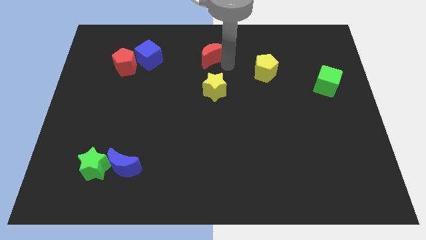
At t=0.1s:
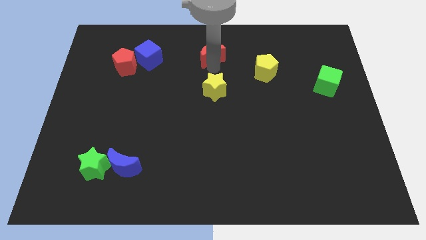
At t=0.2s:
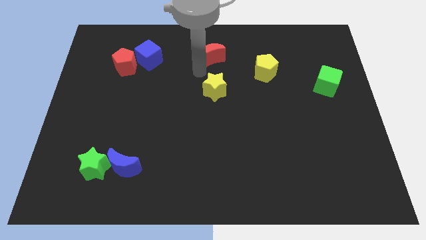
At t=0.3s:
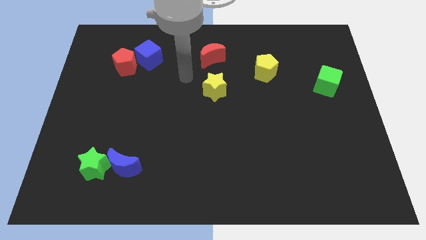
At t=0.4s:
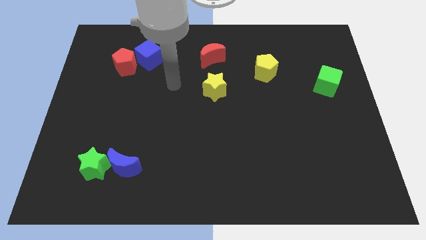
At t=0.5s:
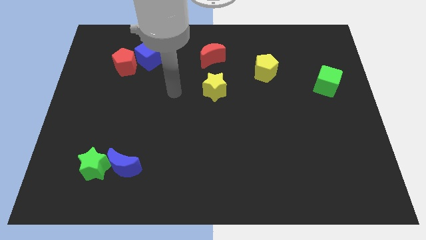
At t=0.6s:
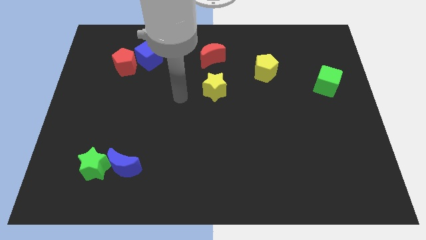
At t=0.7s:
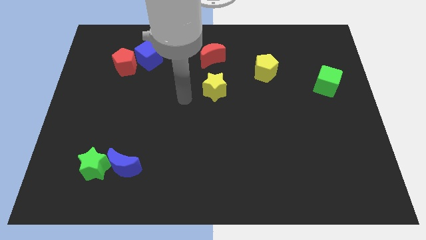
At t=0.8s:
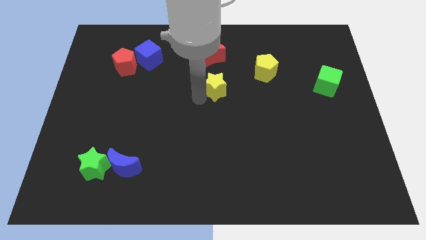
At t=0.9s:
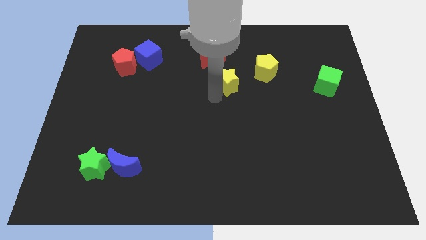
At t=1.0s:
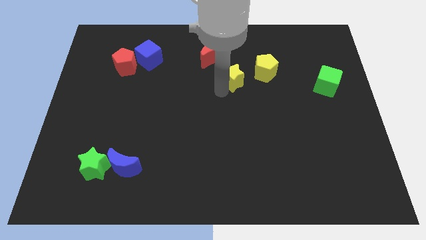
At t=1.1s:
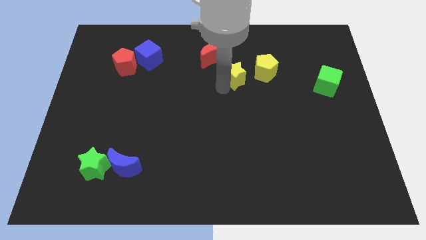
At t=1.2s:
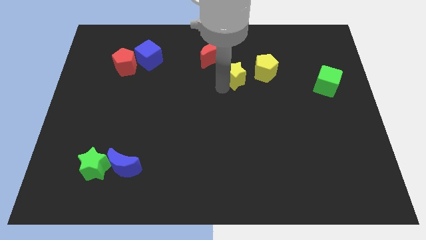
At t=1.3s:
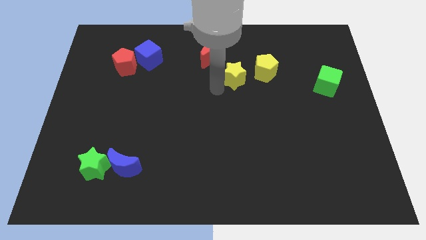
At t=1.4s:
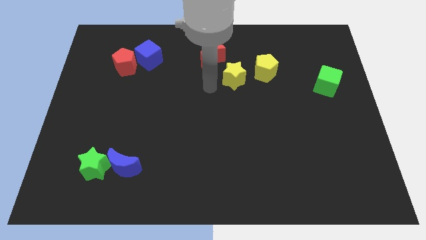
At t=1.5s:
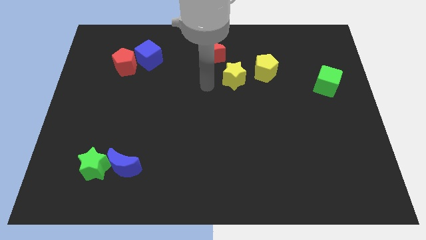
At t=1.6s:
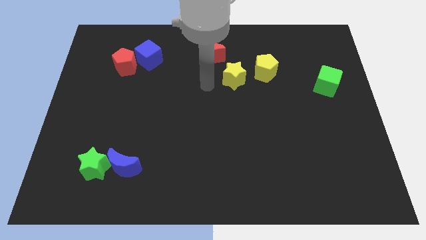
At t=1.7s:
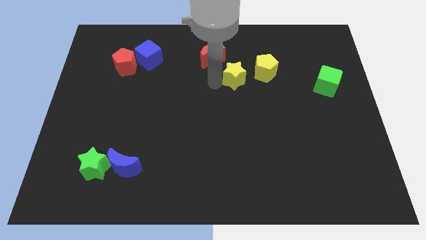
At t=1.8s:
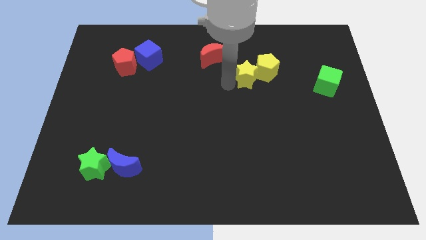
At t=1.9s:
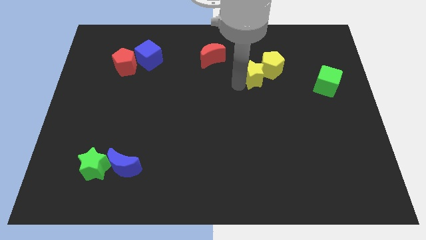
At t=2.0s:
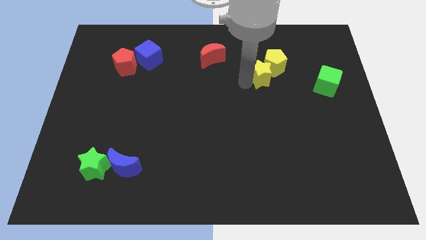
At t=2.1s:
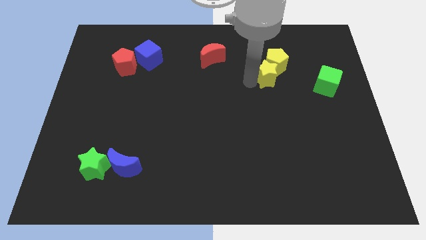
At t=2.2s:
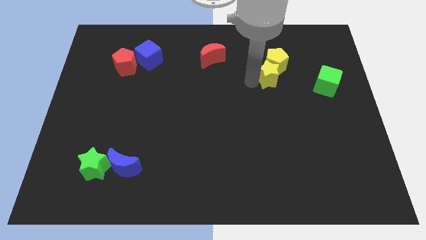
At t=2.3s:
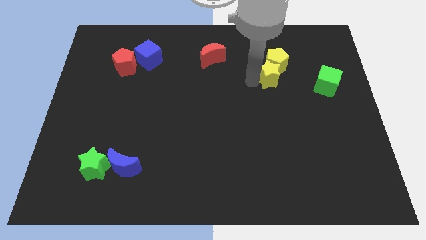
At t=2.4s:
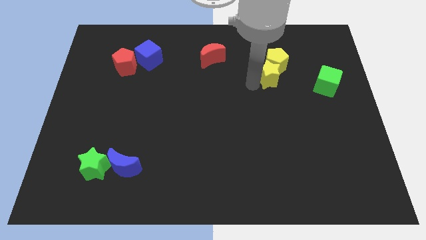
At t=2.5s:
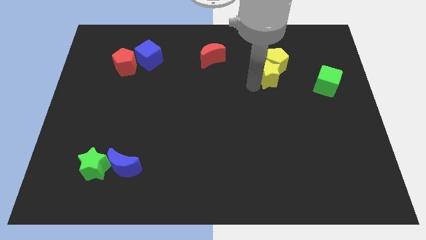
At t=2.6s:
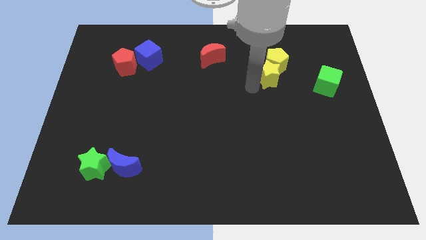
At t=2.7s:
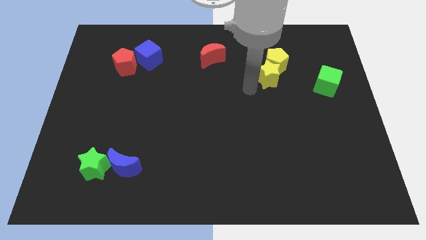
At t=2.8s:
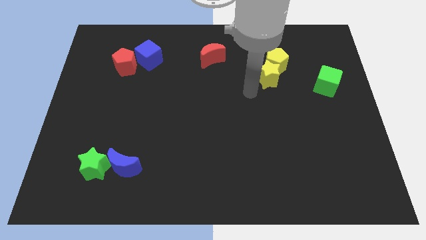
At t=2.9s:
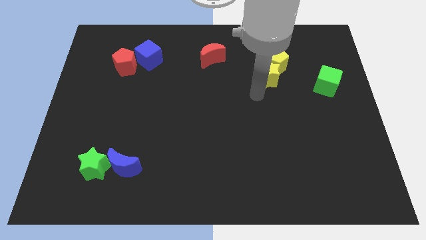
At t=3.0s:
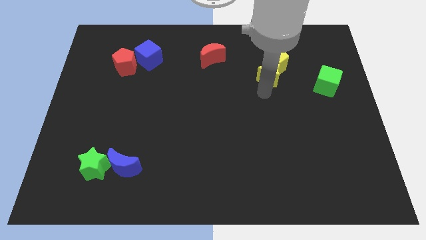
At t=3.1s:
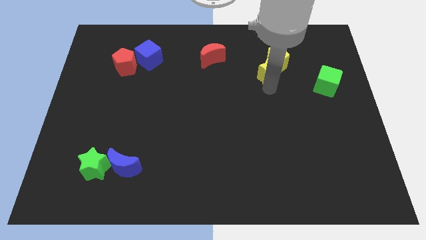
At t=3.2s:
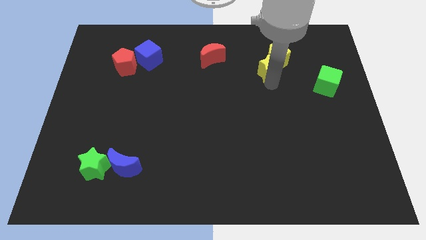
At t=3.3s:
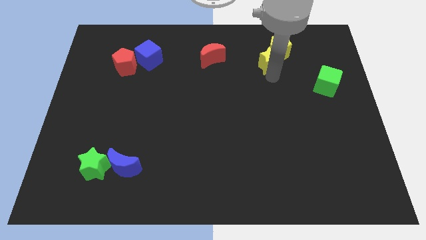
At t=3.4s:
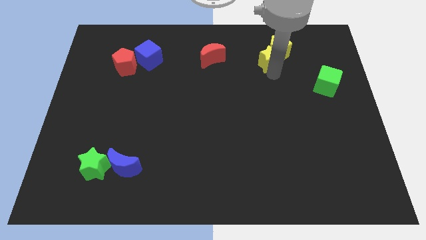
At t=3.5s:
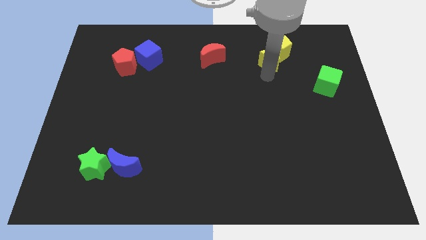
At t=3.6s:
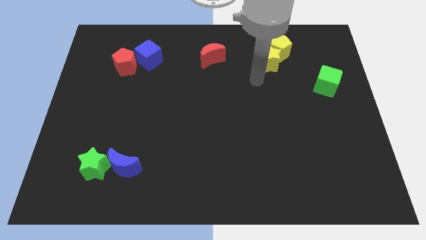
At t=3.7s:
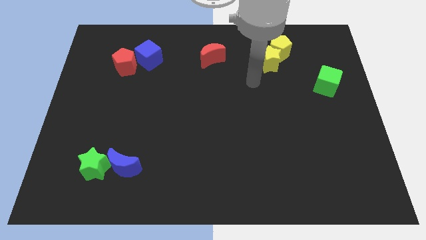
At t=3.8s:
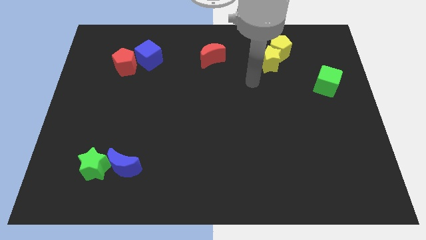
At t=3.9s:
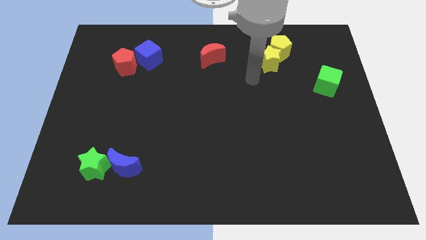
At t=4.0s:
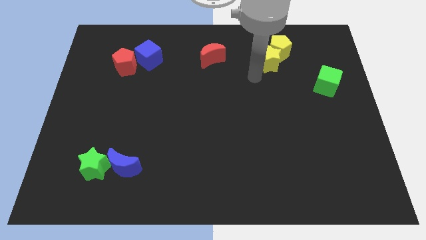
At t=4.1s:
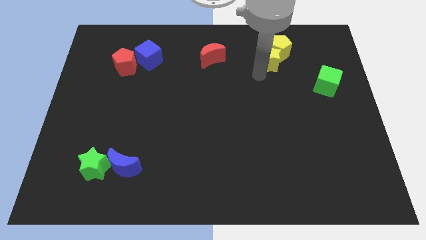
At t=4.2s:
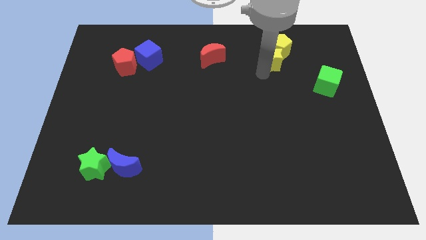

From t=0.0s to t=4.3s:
move the yellow star towards the yellow pentagon

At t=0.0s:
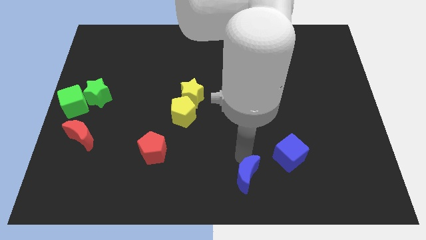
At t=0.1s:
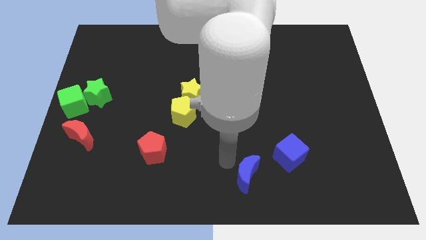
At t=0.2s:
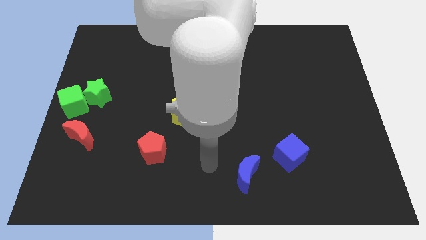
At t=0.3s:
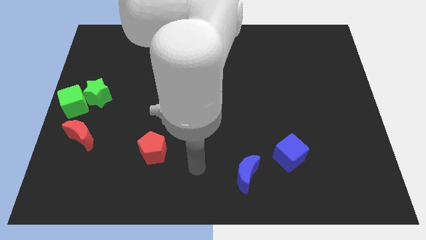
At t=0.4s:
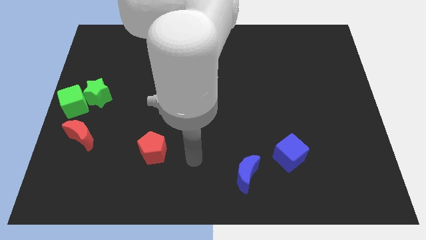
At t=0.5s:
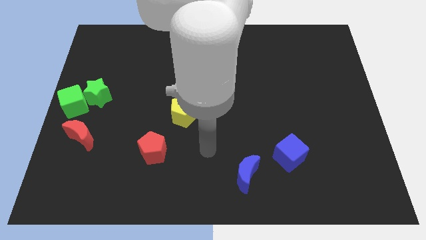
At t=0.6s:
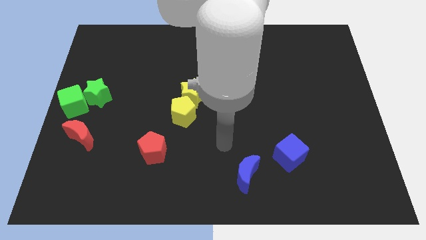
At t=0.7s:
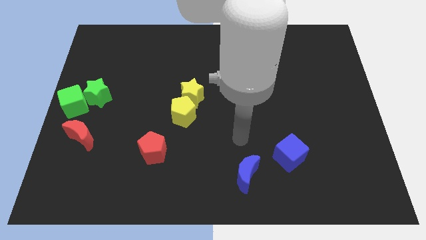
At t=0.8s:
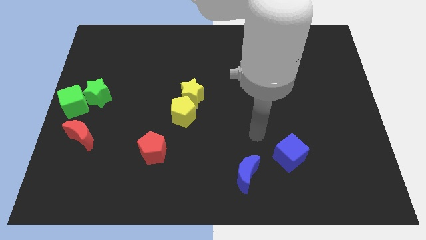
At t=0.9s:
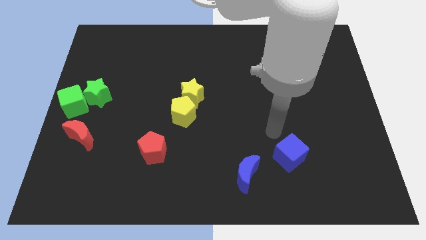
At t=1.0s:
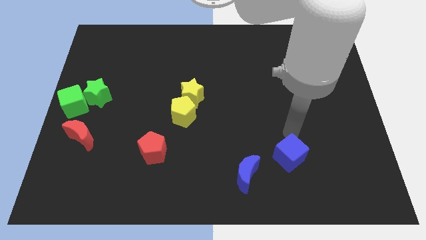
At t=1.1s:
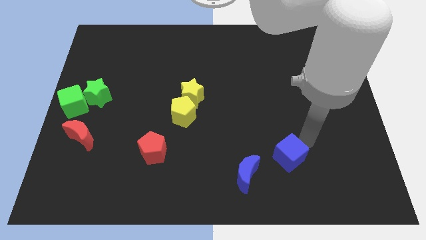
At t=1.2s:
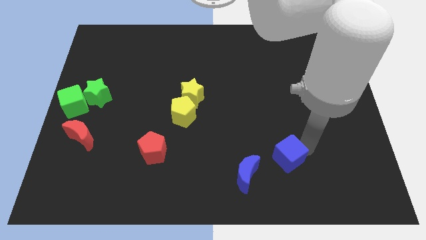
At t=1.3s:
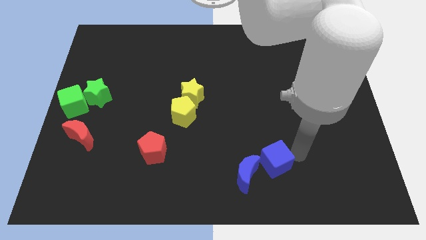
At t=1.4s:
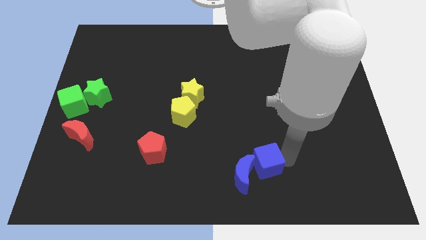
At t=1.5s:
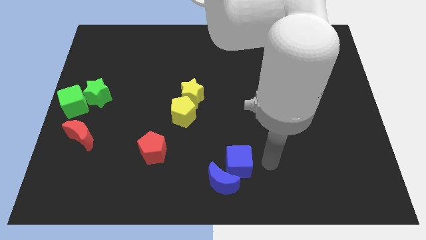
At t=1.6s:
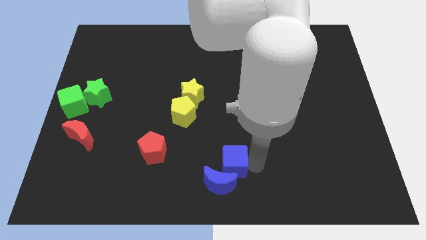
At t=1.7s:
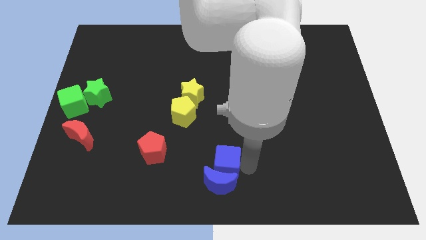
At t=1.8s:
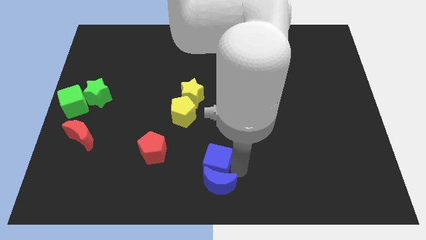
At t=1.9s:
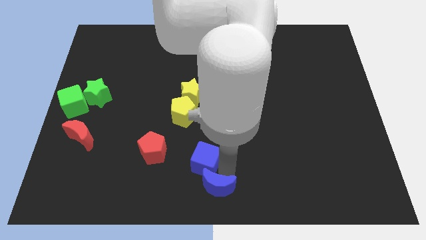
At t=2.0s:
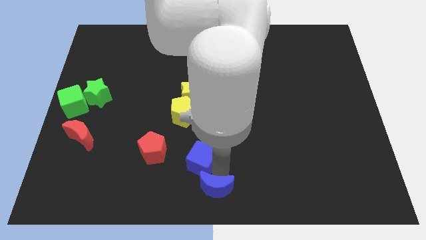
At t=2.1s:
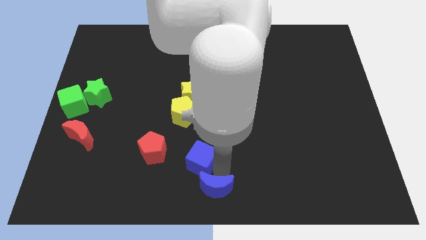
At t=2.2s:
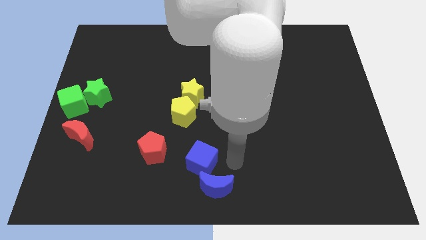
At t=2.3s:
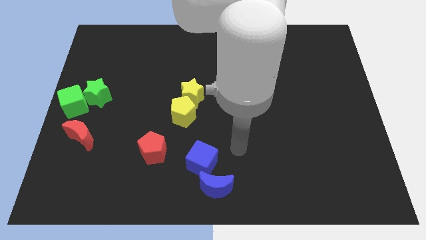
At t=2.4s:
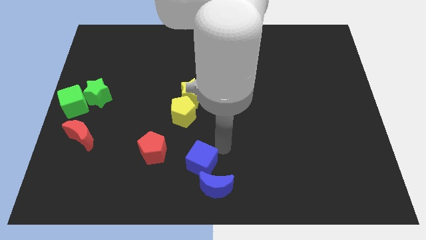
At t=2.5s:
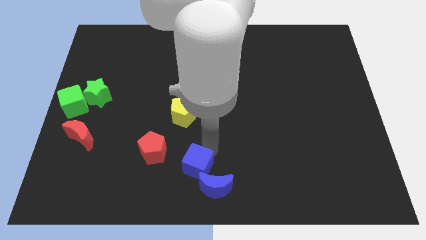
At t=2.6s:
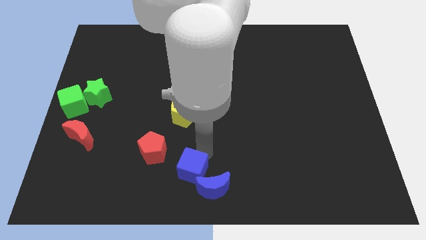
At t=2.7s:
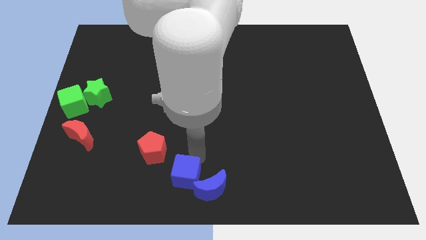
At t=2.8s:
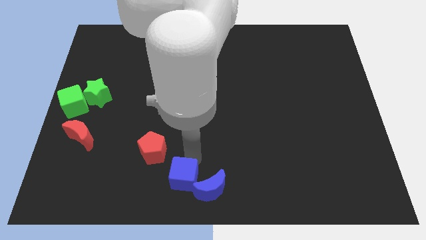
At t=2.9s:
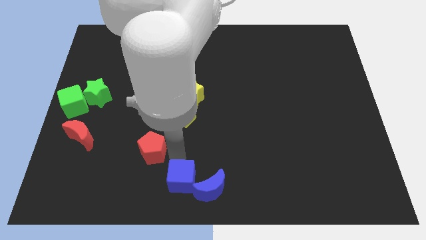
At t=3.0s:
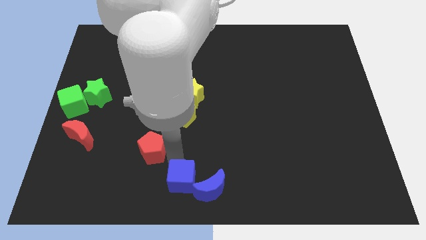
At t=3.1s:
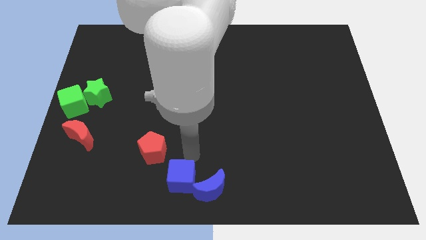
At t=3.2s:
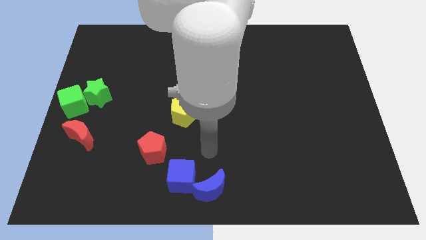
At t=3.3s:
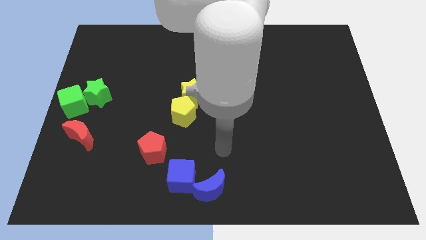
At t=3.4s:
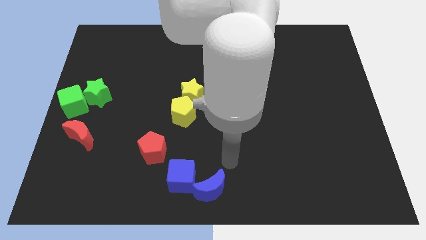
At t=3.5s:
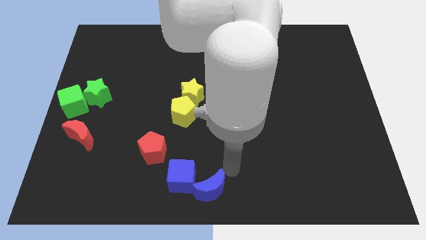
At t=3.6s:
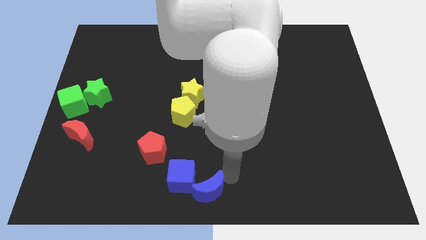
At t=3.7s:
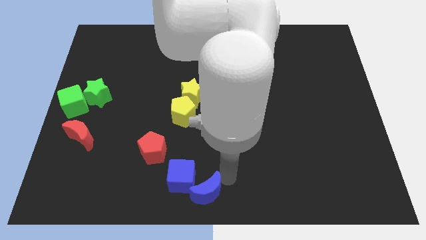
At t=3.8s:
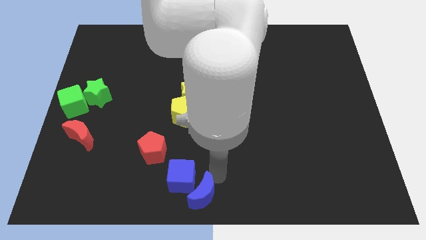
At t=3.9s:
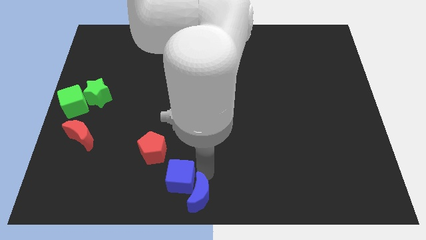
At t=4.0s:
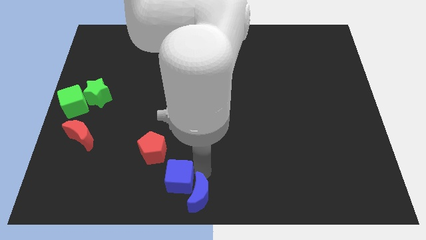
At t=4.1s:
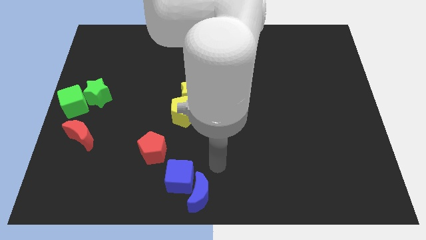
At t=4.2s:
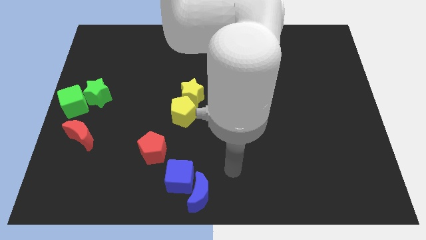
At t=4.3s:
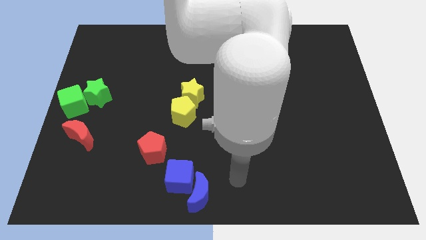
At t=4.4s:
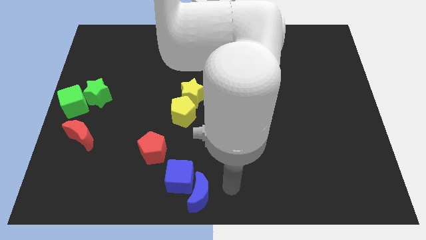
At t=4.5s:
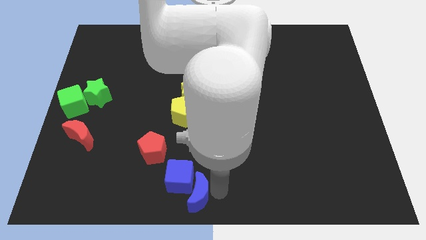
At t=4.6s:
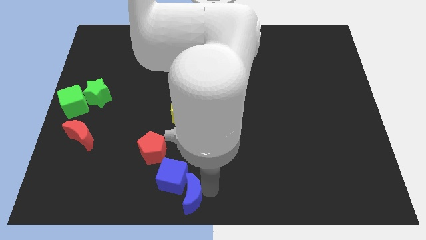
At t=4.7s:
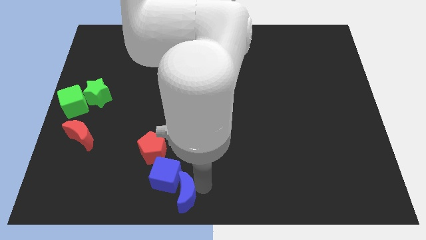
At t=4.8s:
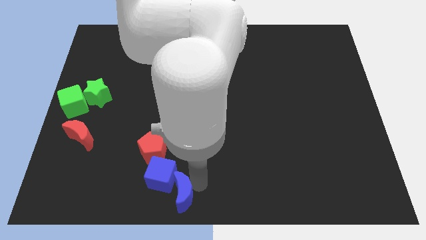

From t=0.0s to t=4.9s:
move the blue moon and blue cube to the bottom center
